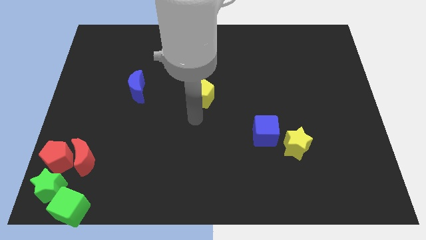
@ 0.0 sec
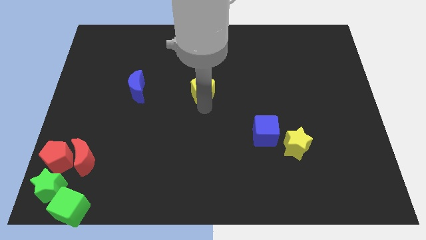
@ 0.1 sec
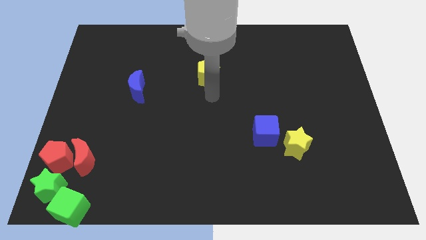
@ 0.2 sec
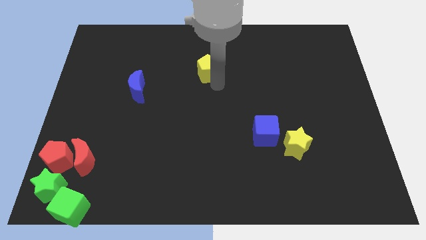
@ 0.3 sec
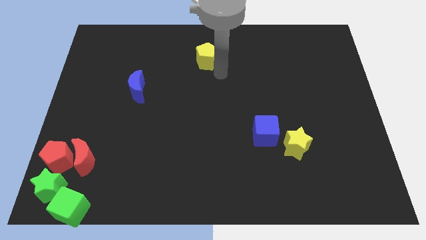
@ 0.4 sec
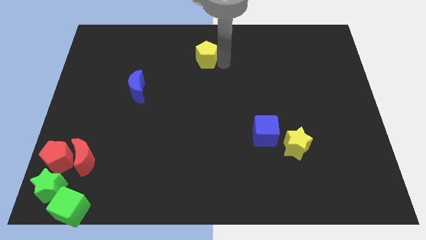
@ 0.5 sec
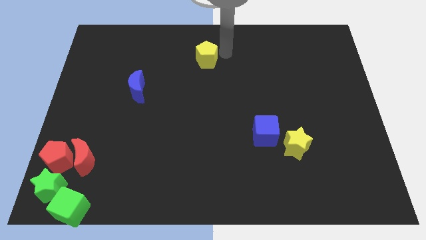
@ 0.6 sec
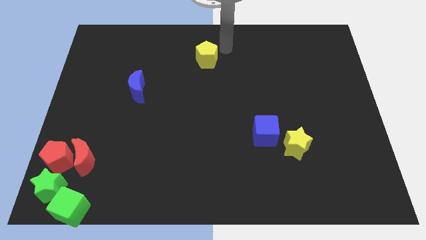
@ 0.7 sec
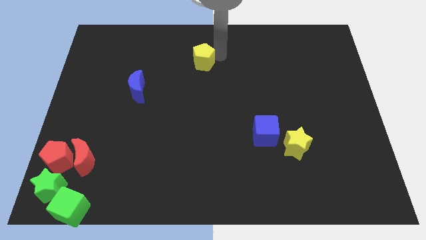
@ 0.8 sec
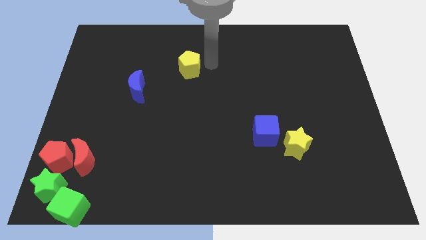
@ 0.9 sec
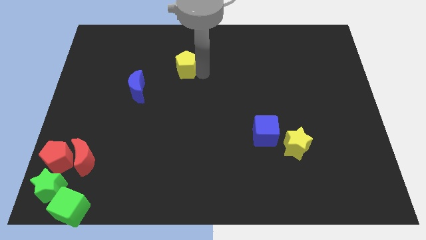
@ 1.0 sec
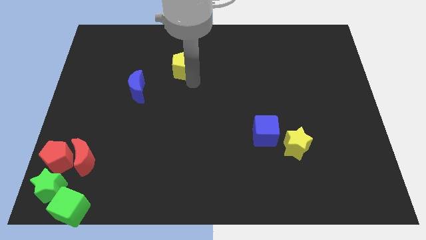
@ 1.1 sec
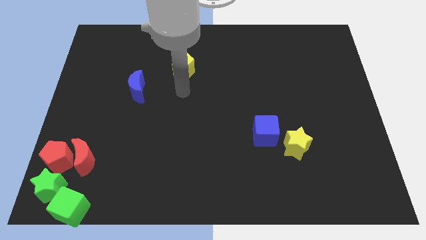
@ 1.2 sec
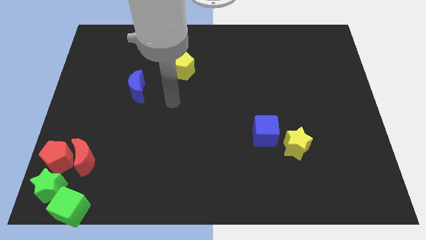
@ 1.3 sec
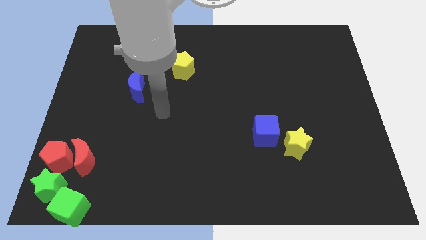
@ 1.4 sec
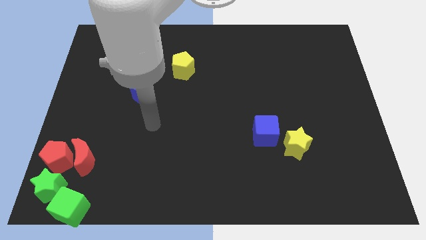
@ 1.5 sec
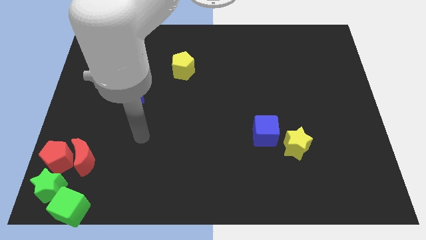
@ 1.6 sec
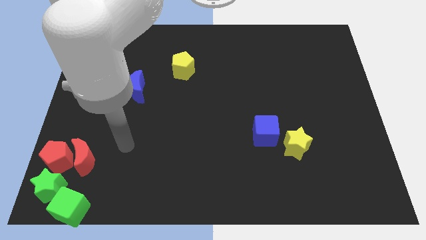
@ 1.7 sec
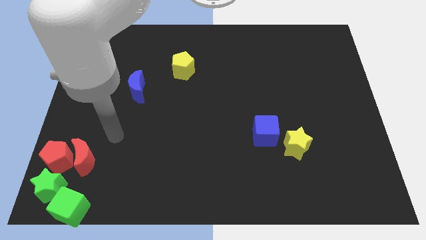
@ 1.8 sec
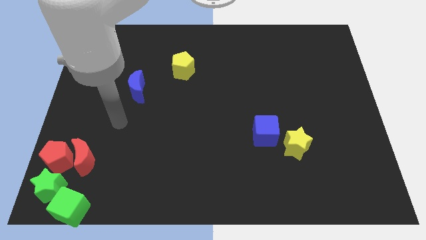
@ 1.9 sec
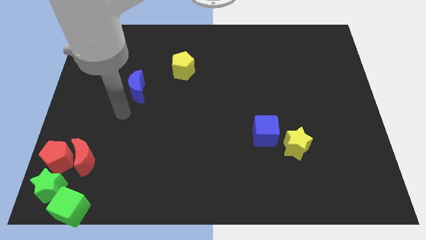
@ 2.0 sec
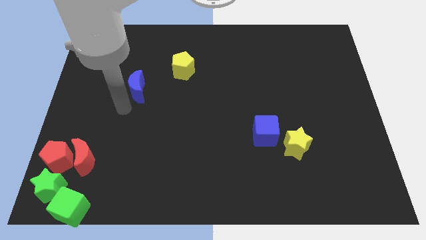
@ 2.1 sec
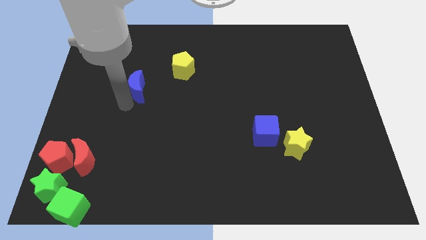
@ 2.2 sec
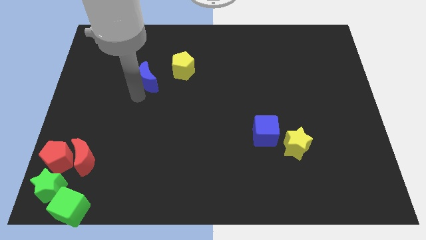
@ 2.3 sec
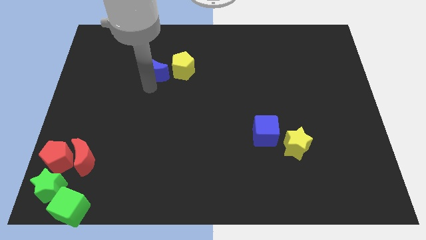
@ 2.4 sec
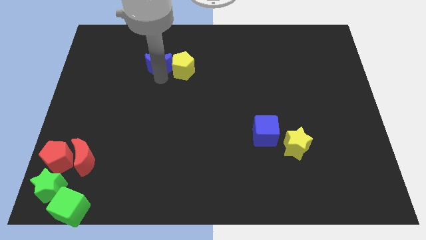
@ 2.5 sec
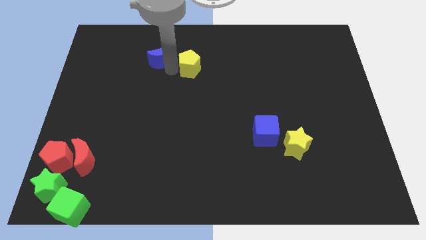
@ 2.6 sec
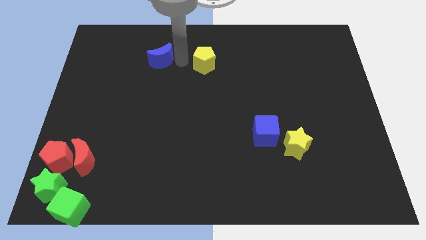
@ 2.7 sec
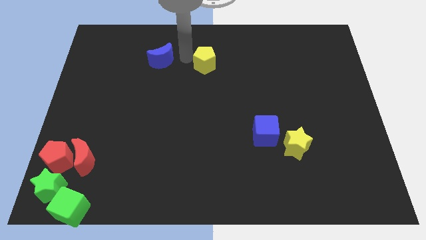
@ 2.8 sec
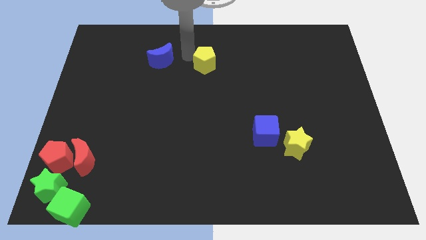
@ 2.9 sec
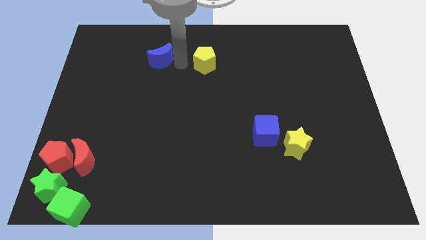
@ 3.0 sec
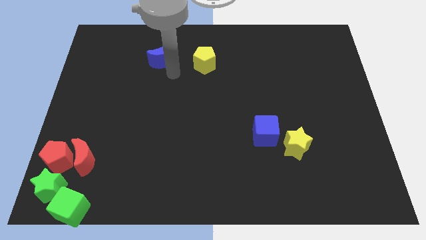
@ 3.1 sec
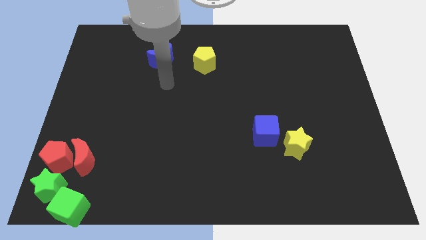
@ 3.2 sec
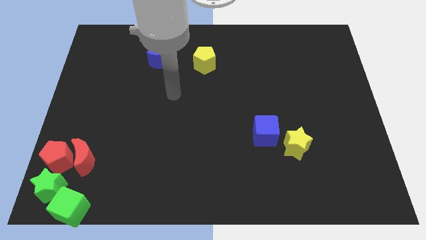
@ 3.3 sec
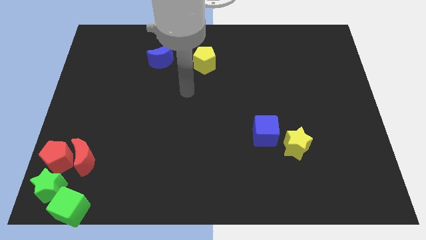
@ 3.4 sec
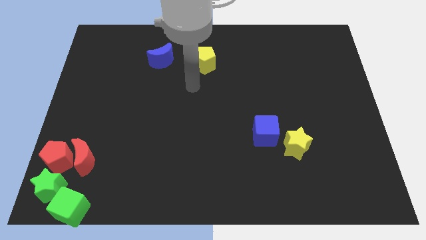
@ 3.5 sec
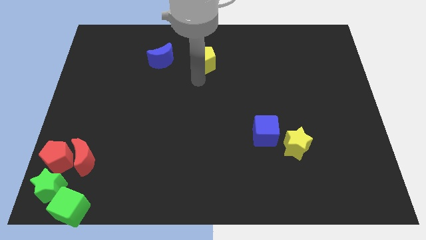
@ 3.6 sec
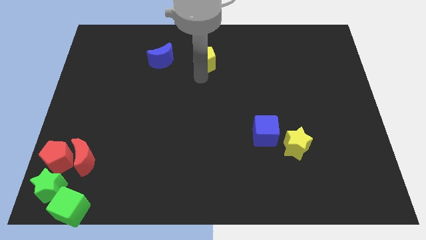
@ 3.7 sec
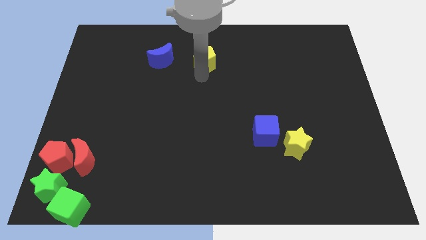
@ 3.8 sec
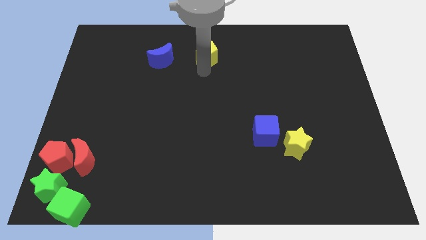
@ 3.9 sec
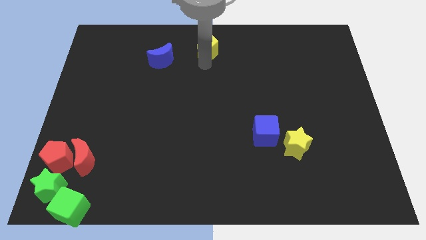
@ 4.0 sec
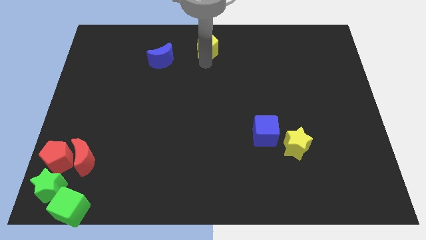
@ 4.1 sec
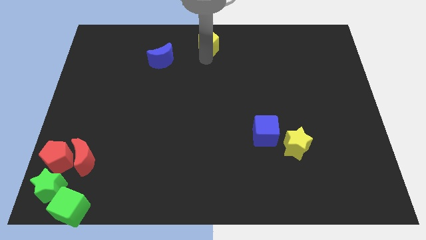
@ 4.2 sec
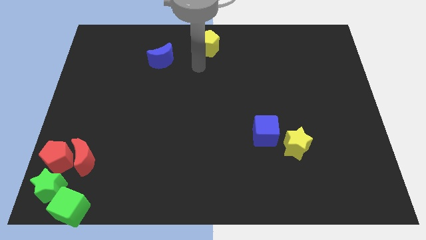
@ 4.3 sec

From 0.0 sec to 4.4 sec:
place yellow pentagon to the top center of the board

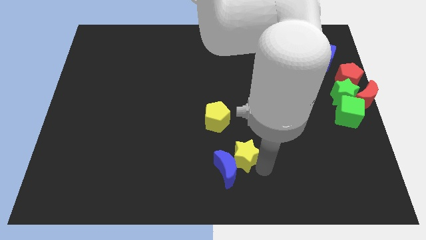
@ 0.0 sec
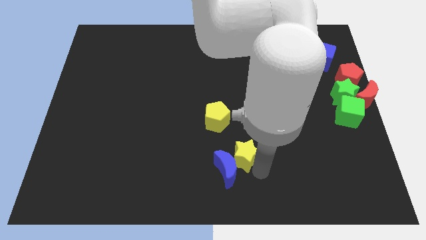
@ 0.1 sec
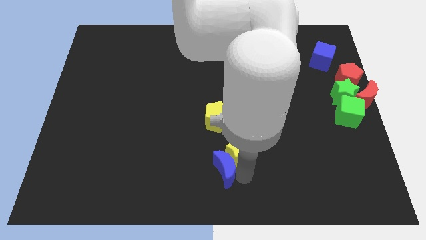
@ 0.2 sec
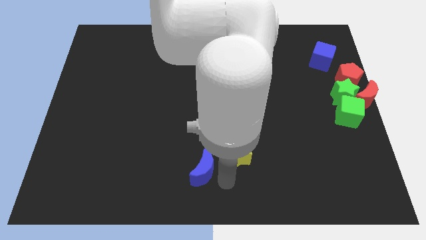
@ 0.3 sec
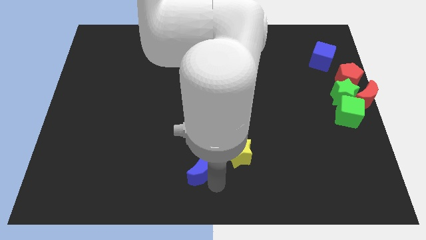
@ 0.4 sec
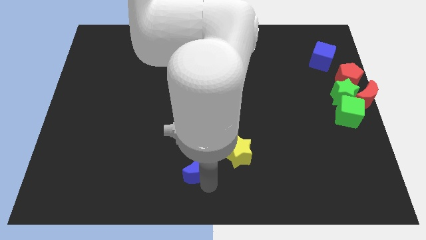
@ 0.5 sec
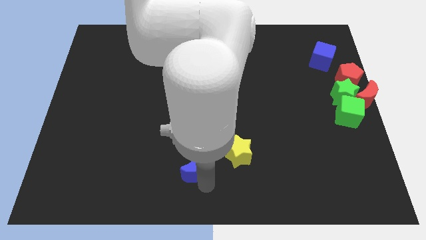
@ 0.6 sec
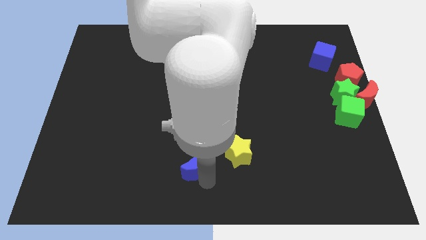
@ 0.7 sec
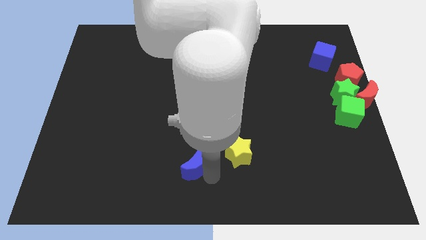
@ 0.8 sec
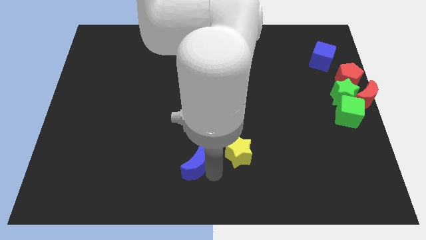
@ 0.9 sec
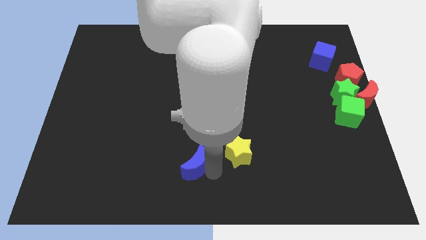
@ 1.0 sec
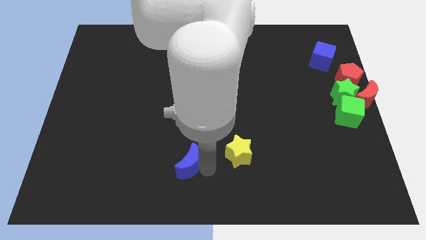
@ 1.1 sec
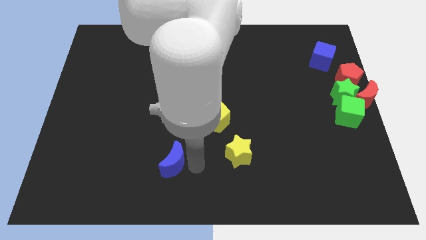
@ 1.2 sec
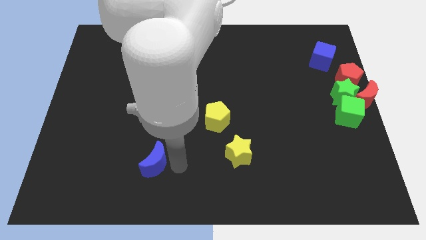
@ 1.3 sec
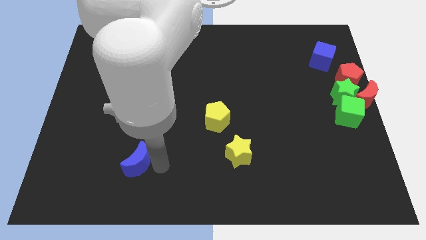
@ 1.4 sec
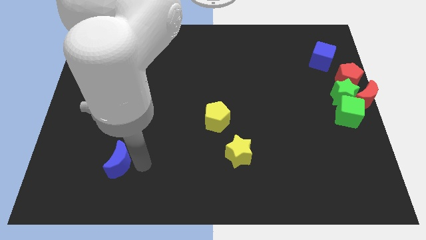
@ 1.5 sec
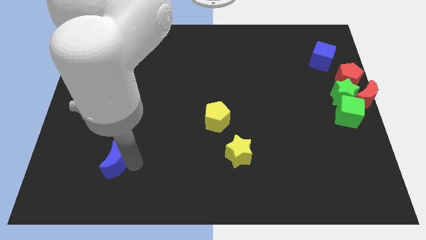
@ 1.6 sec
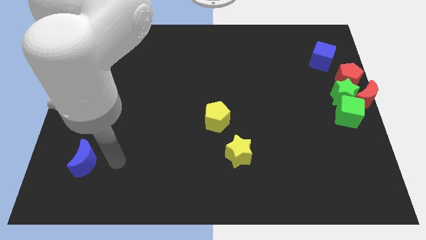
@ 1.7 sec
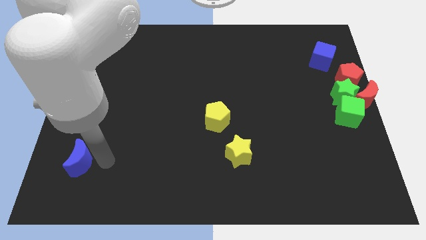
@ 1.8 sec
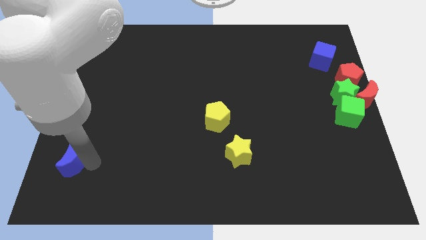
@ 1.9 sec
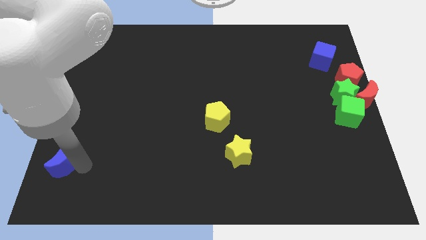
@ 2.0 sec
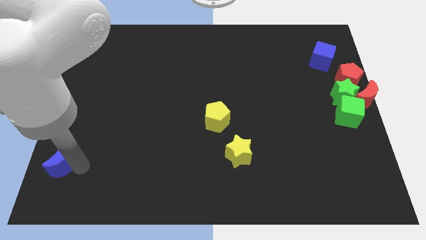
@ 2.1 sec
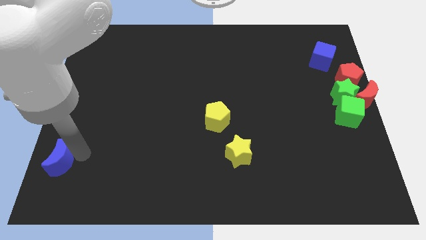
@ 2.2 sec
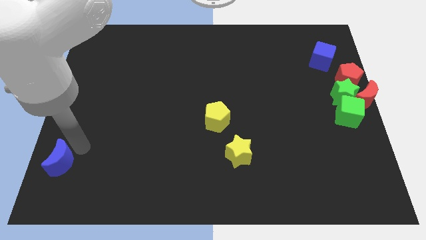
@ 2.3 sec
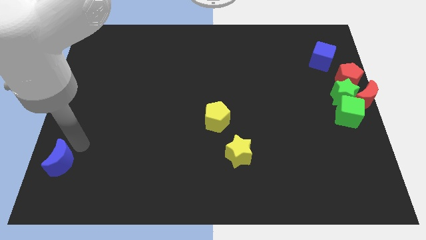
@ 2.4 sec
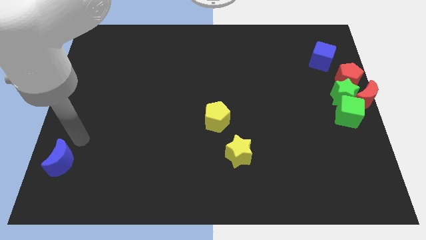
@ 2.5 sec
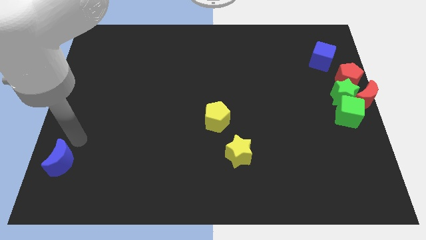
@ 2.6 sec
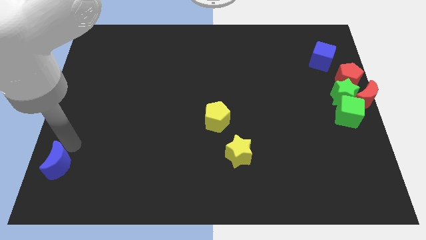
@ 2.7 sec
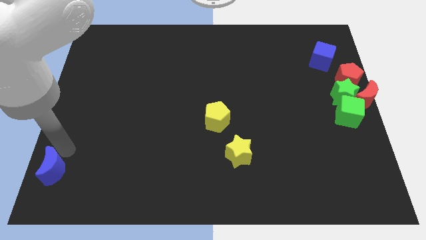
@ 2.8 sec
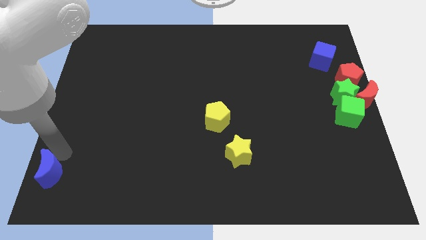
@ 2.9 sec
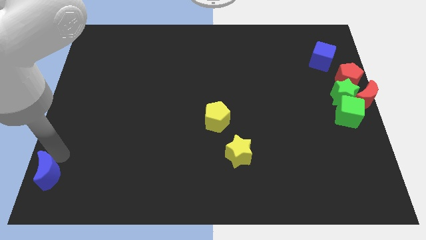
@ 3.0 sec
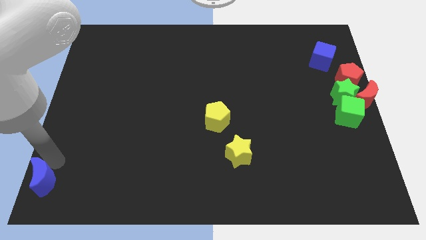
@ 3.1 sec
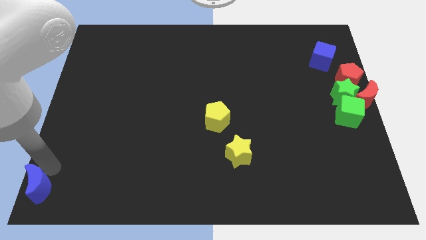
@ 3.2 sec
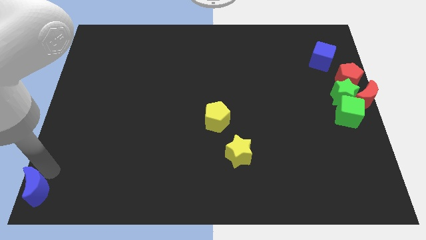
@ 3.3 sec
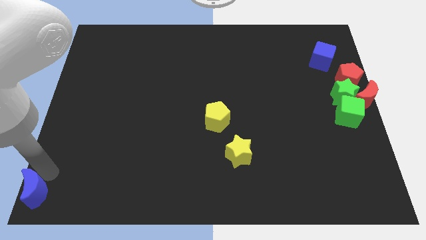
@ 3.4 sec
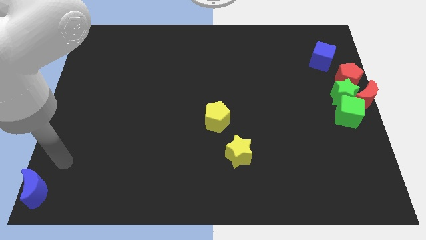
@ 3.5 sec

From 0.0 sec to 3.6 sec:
push the blue crescent to the bottom left to the board

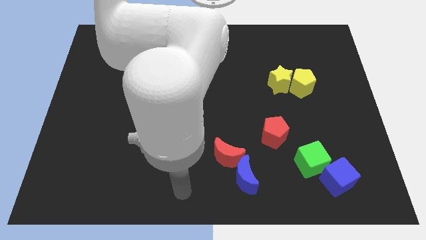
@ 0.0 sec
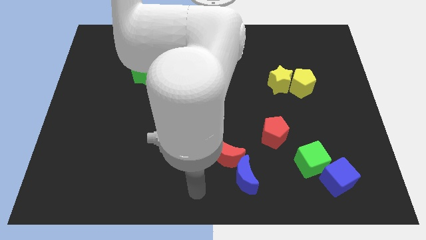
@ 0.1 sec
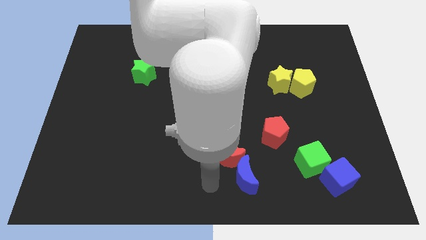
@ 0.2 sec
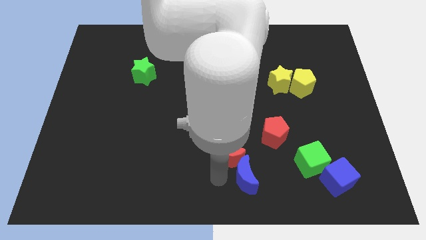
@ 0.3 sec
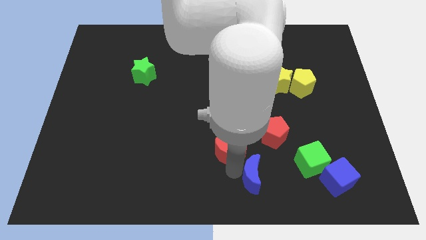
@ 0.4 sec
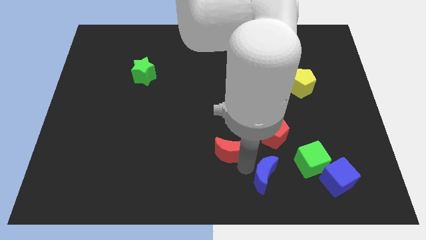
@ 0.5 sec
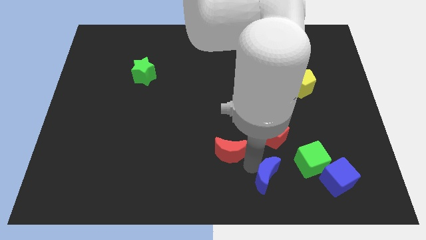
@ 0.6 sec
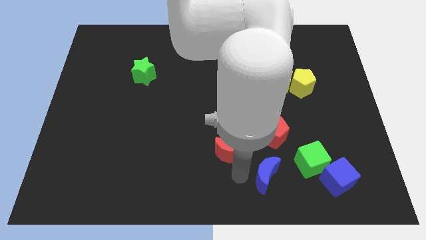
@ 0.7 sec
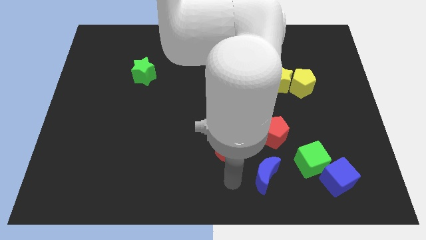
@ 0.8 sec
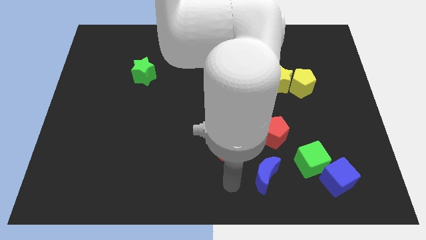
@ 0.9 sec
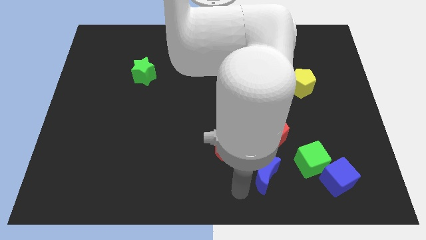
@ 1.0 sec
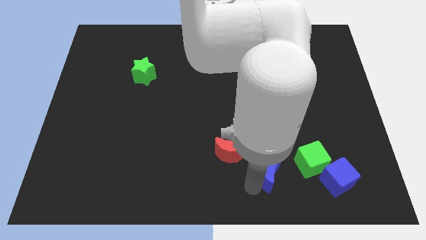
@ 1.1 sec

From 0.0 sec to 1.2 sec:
separate the red crescent and blue crescent
